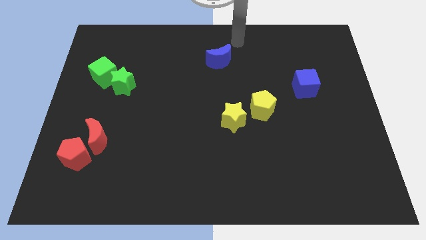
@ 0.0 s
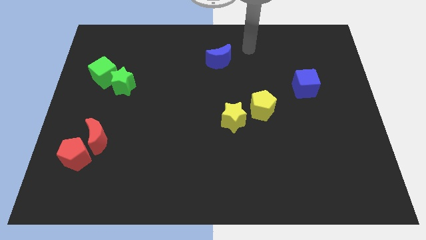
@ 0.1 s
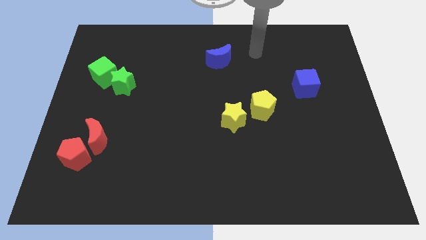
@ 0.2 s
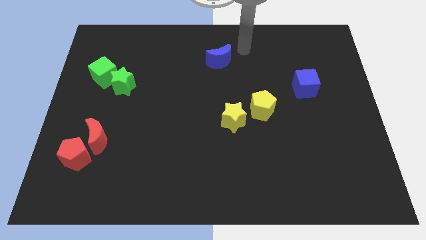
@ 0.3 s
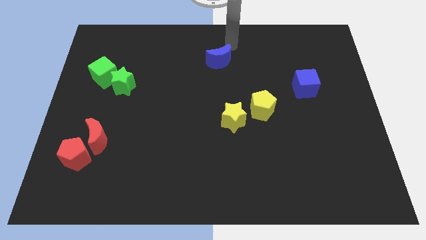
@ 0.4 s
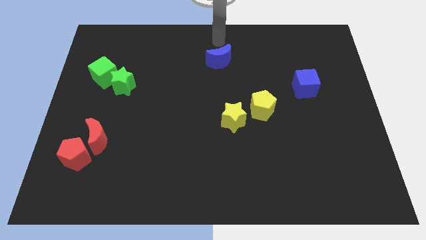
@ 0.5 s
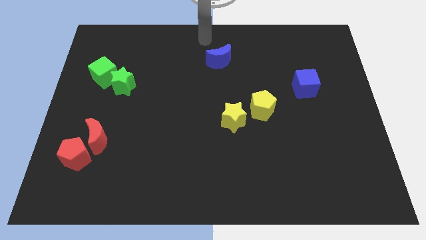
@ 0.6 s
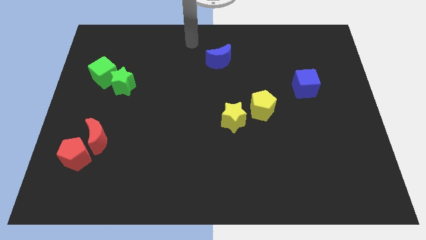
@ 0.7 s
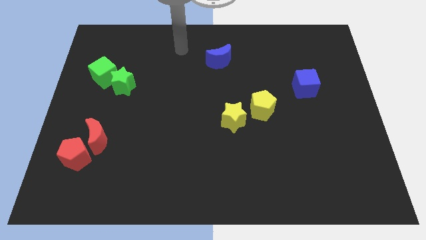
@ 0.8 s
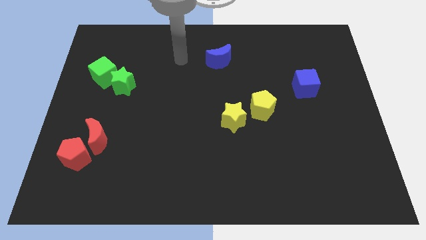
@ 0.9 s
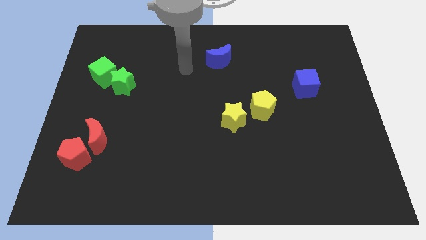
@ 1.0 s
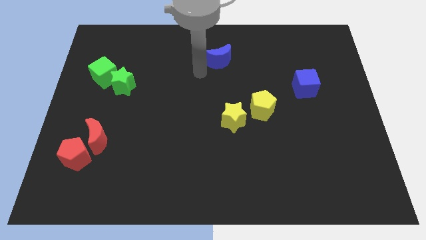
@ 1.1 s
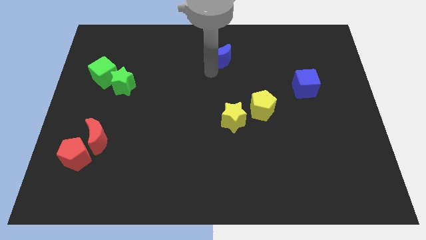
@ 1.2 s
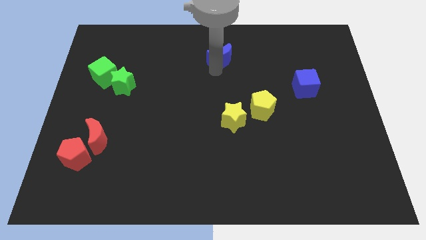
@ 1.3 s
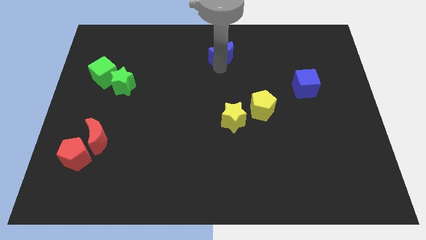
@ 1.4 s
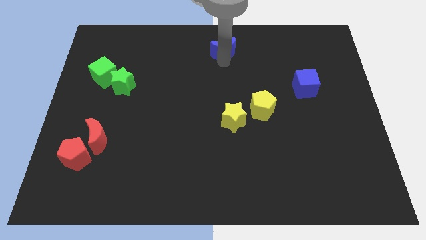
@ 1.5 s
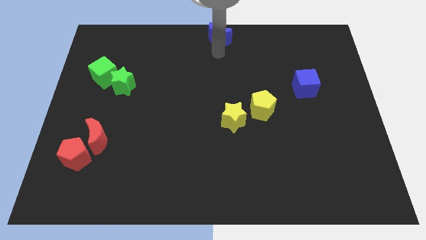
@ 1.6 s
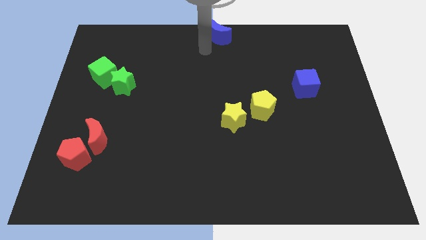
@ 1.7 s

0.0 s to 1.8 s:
place the blue moon at the top center of the board

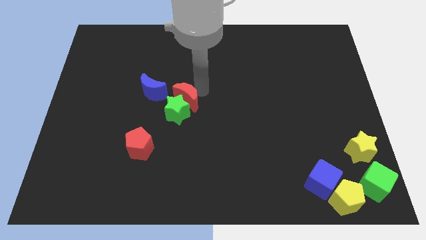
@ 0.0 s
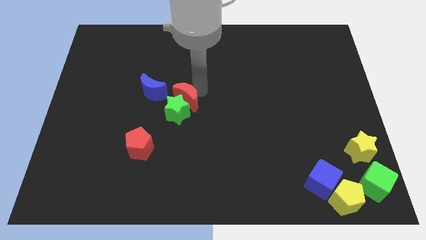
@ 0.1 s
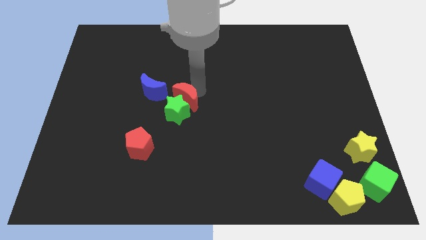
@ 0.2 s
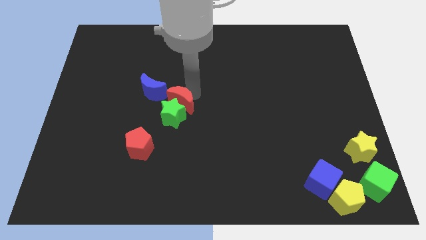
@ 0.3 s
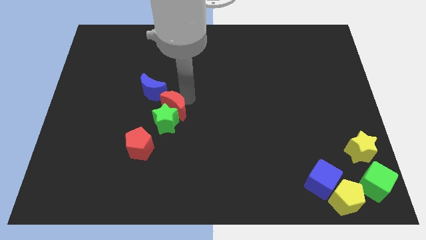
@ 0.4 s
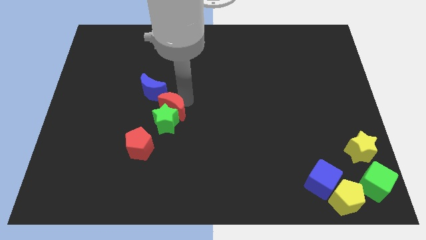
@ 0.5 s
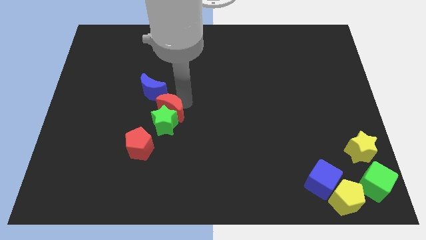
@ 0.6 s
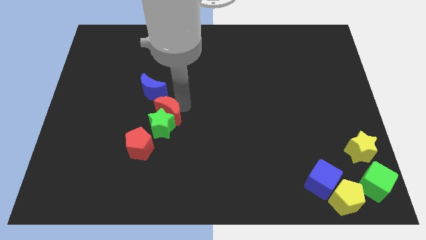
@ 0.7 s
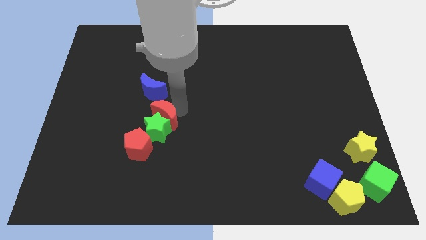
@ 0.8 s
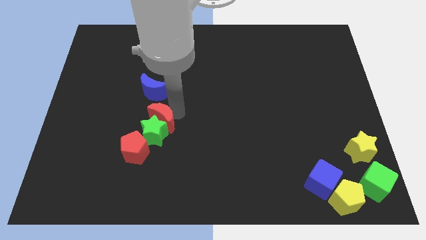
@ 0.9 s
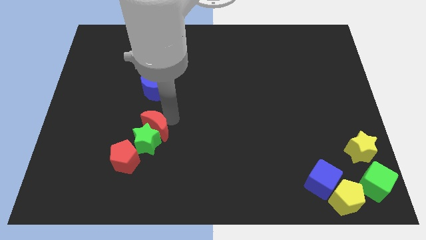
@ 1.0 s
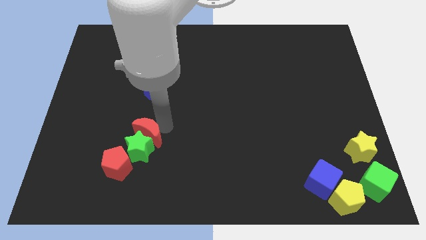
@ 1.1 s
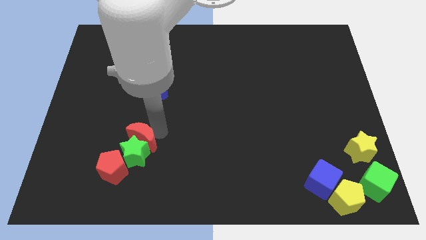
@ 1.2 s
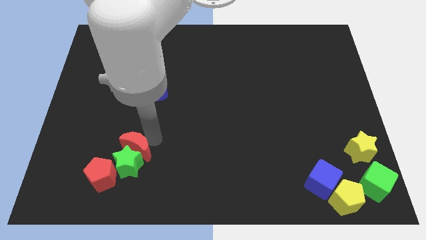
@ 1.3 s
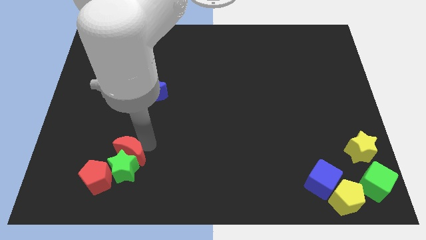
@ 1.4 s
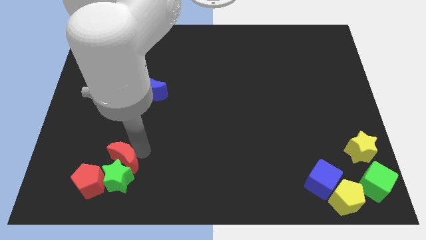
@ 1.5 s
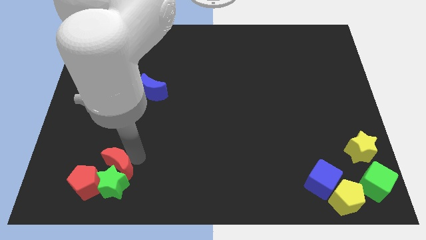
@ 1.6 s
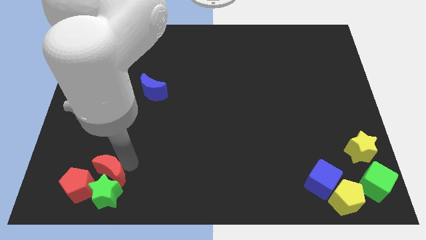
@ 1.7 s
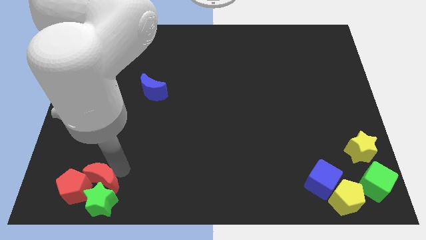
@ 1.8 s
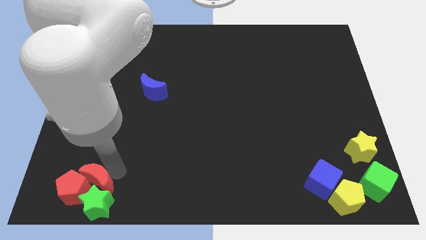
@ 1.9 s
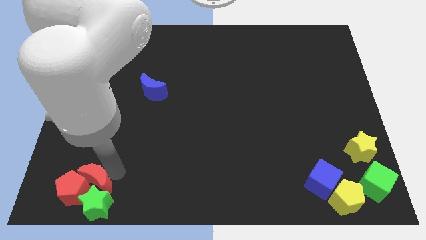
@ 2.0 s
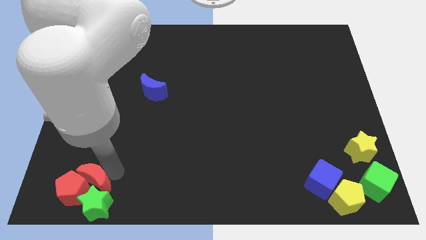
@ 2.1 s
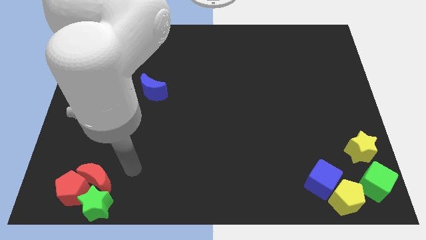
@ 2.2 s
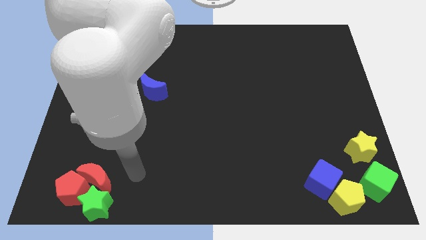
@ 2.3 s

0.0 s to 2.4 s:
push green star to the bottom left with the help of red crescent

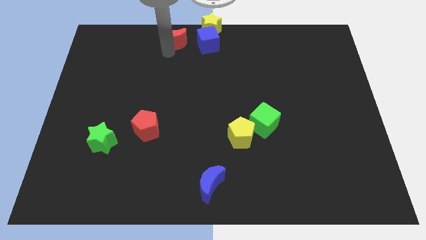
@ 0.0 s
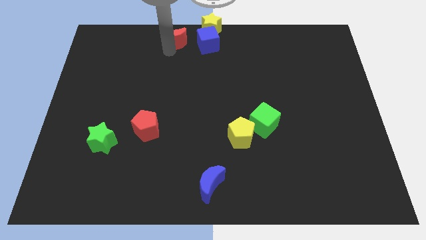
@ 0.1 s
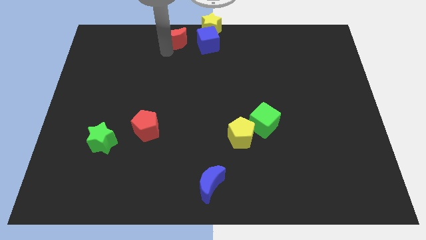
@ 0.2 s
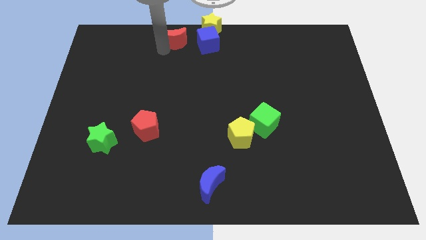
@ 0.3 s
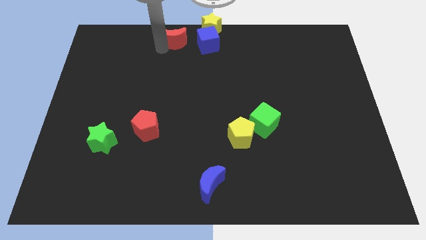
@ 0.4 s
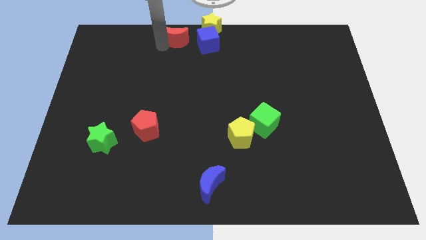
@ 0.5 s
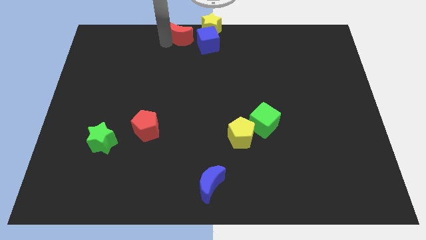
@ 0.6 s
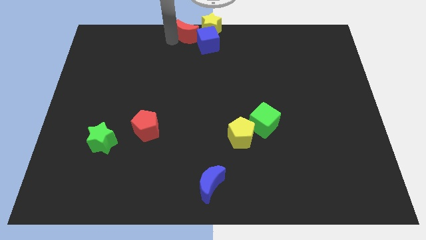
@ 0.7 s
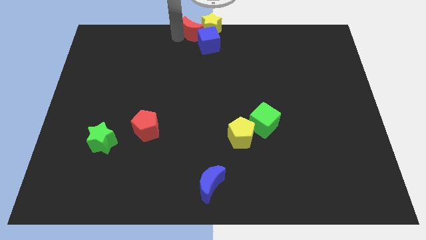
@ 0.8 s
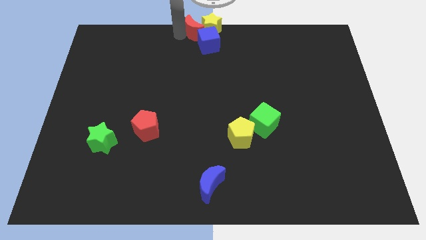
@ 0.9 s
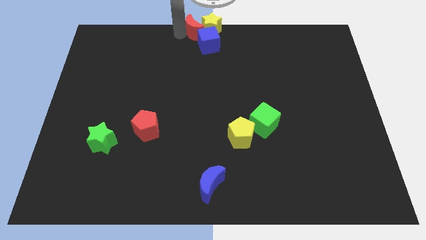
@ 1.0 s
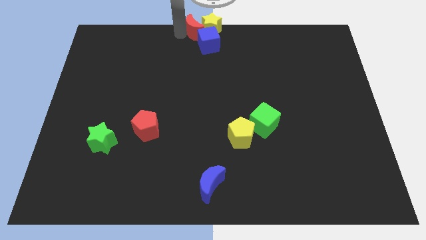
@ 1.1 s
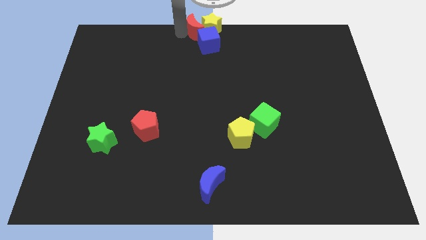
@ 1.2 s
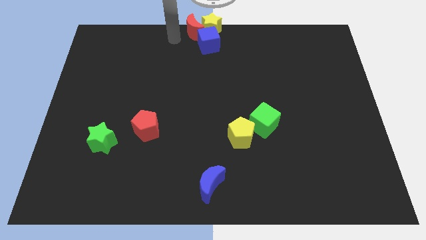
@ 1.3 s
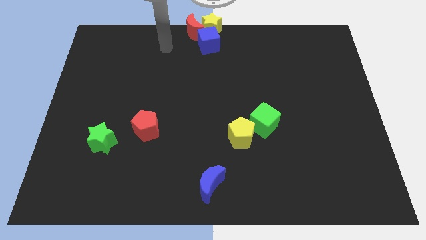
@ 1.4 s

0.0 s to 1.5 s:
put the red crescent on the left side of the yellow star

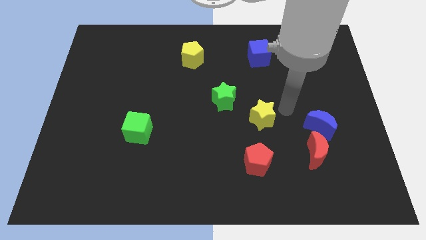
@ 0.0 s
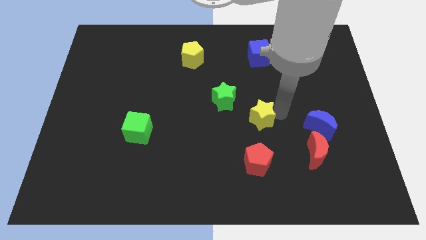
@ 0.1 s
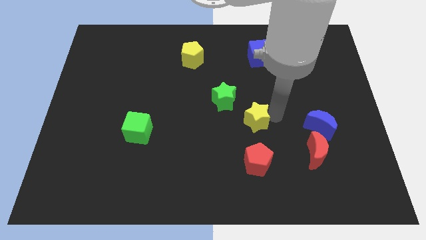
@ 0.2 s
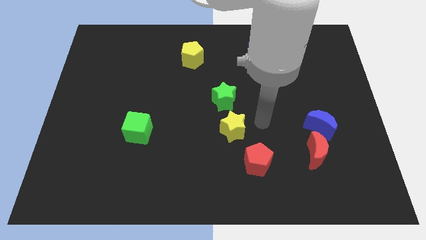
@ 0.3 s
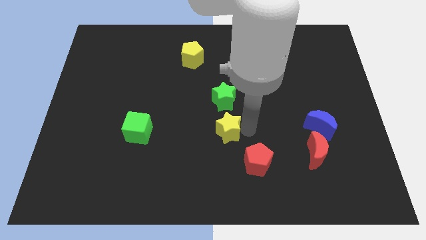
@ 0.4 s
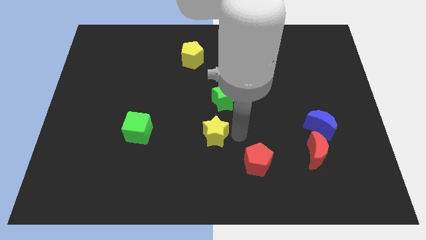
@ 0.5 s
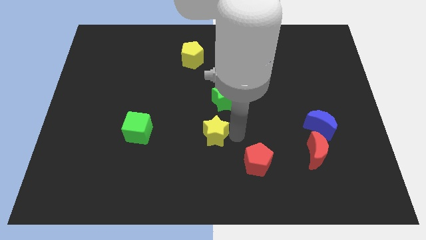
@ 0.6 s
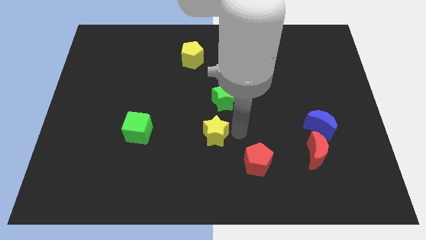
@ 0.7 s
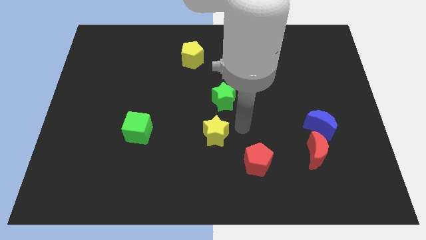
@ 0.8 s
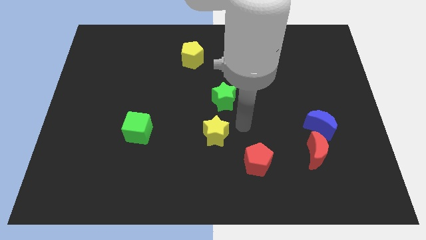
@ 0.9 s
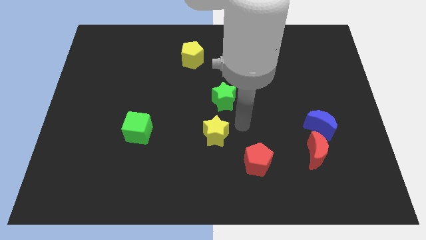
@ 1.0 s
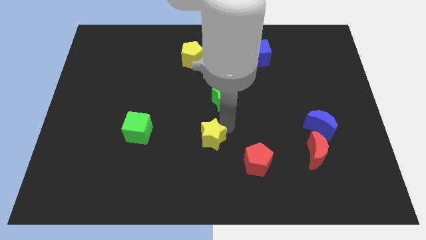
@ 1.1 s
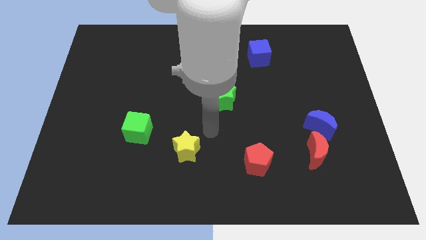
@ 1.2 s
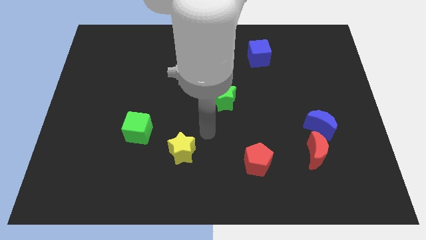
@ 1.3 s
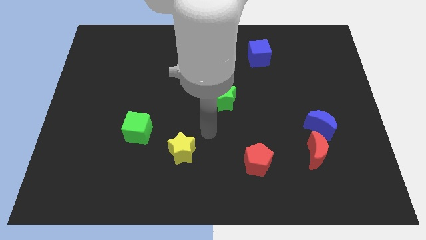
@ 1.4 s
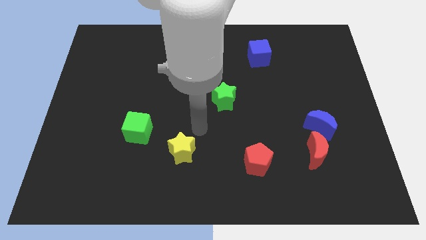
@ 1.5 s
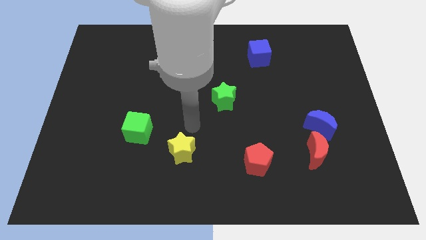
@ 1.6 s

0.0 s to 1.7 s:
move the yellow star diagonal to the green star

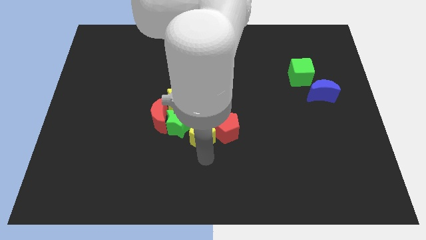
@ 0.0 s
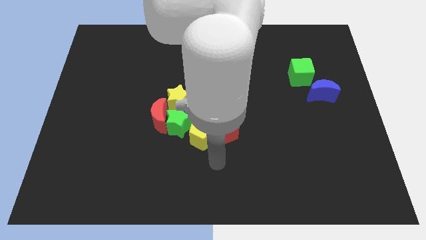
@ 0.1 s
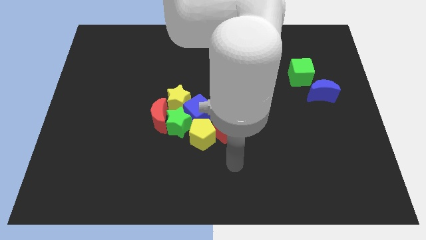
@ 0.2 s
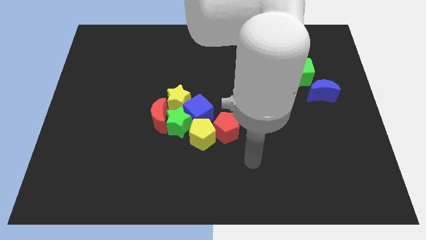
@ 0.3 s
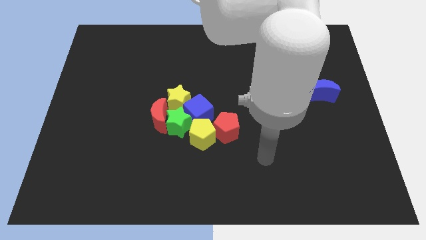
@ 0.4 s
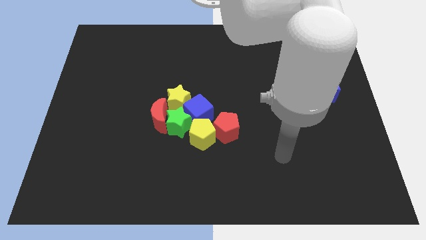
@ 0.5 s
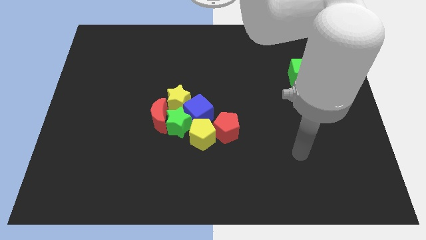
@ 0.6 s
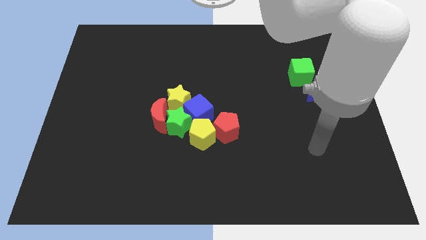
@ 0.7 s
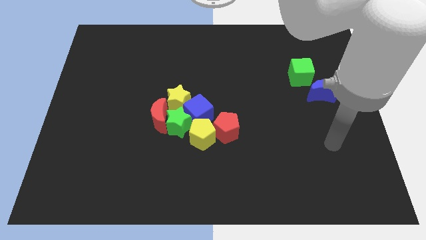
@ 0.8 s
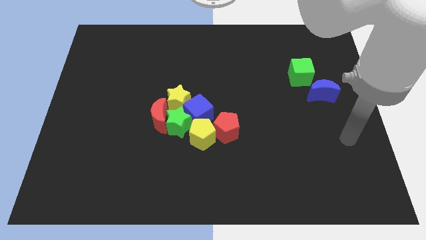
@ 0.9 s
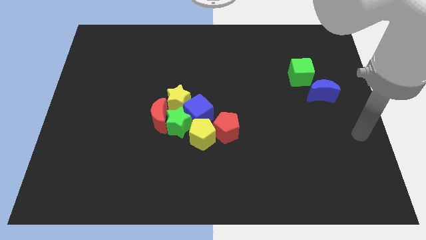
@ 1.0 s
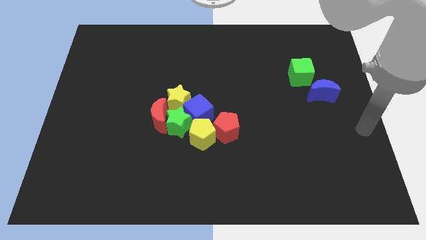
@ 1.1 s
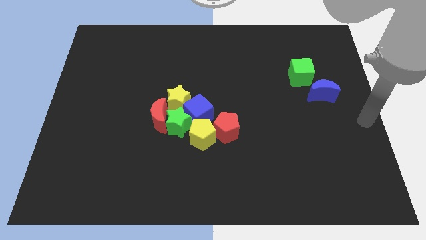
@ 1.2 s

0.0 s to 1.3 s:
move your arm away from yellow pentagon

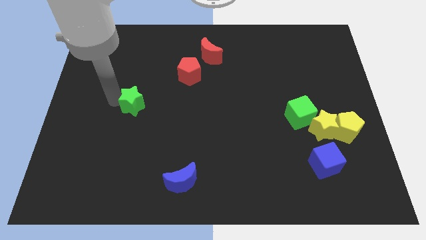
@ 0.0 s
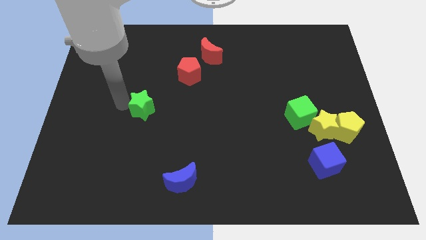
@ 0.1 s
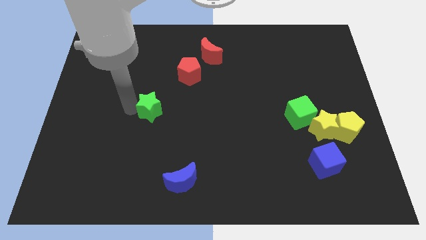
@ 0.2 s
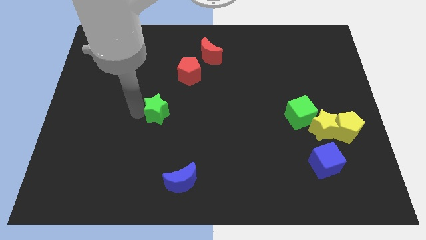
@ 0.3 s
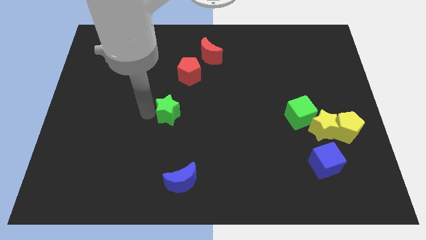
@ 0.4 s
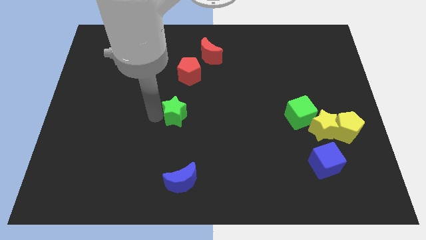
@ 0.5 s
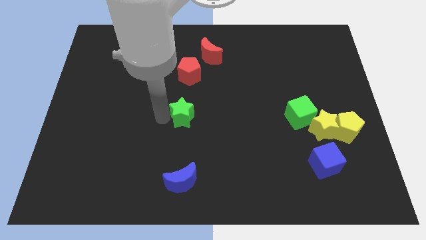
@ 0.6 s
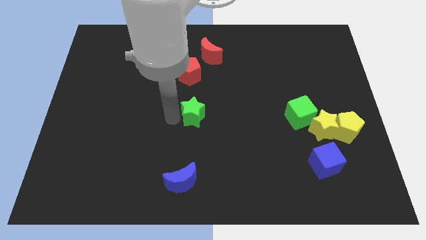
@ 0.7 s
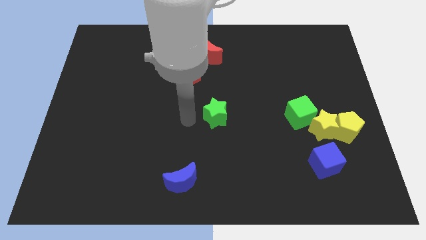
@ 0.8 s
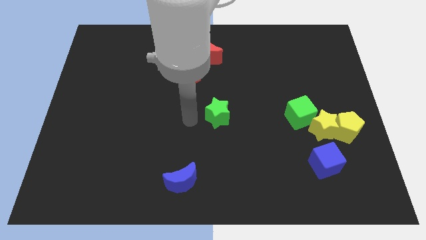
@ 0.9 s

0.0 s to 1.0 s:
move green star to the bottom of red moon
